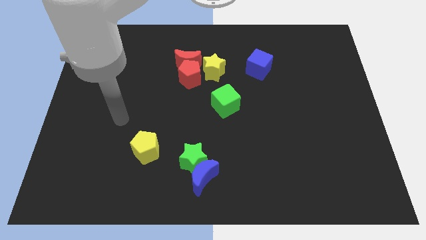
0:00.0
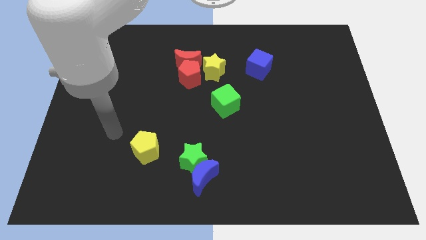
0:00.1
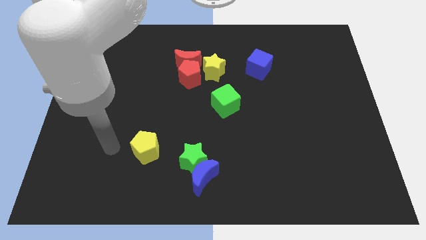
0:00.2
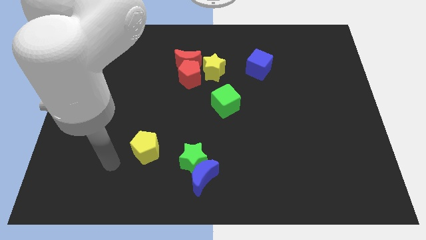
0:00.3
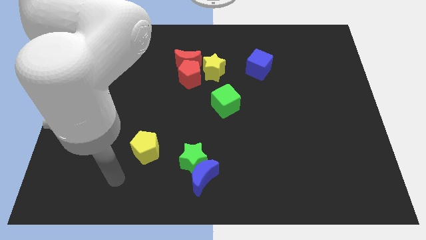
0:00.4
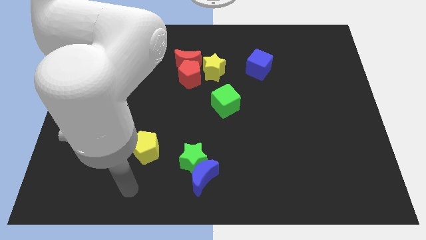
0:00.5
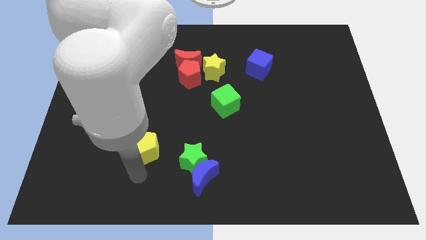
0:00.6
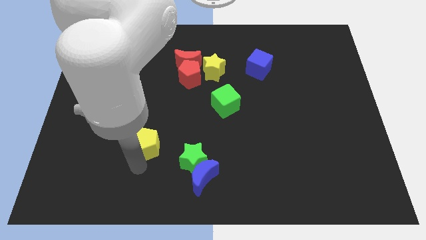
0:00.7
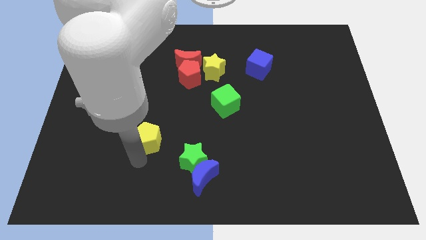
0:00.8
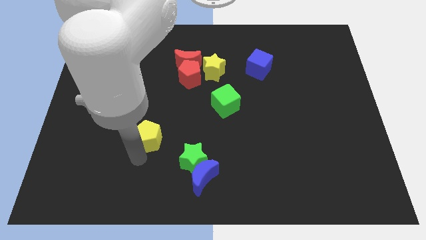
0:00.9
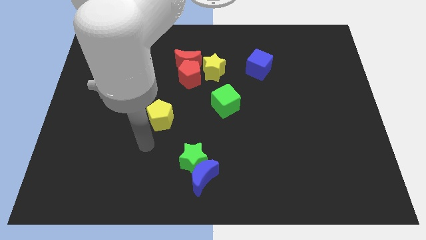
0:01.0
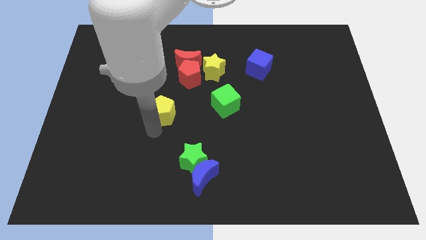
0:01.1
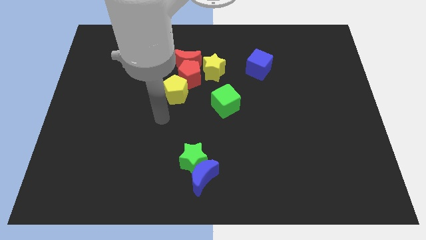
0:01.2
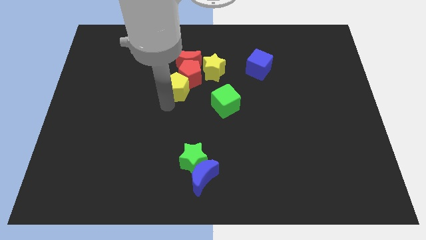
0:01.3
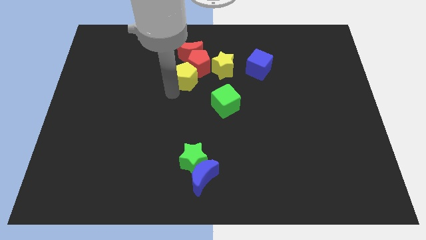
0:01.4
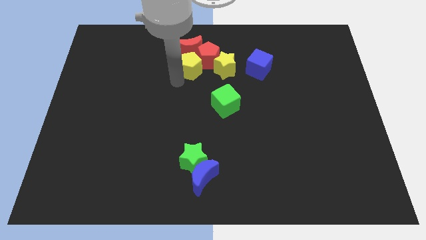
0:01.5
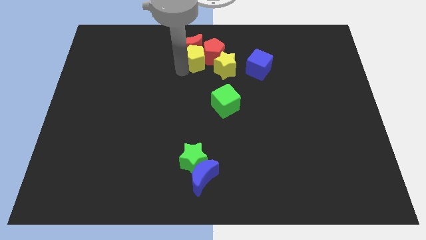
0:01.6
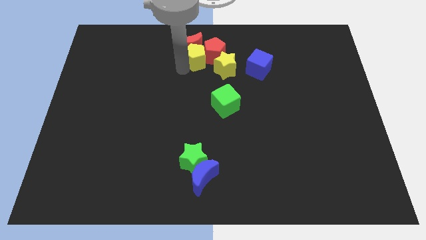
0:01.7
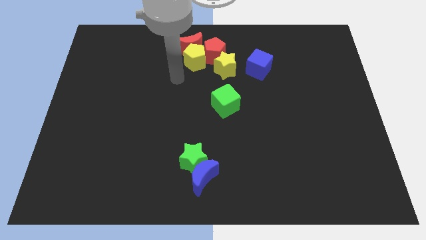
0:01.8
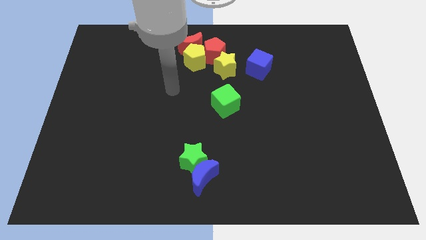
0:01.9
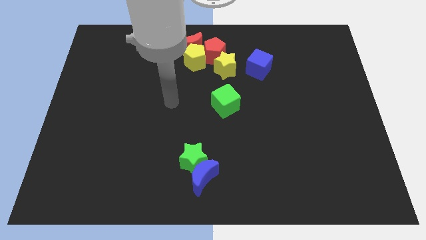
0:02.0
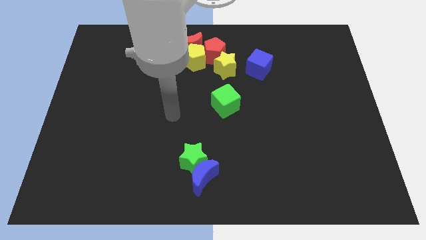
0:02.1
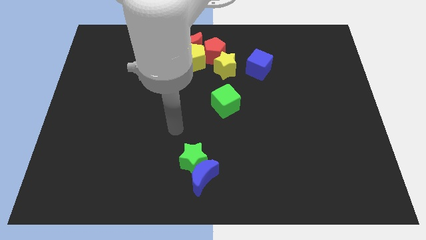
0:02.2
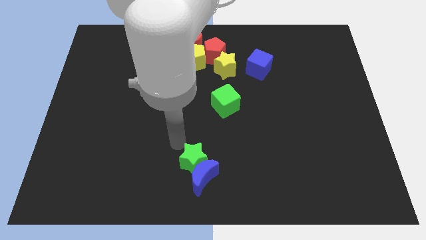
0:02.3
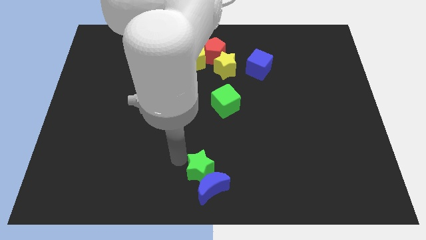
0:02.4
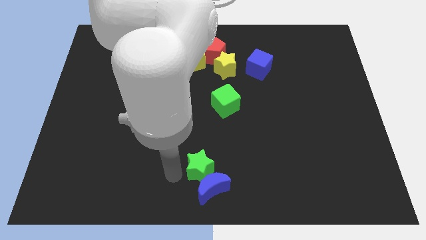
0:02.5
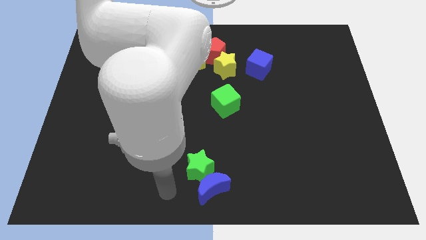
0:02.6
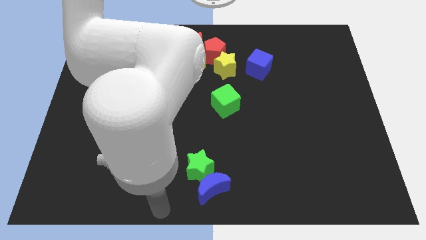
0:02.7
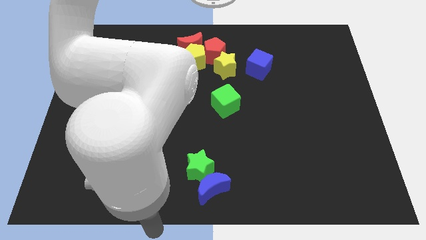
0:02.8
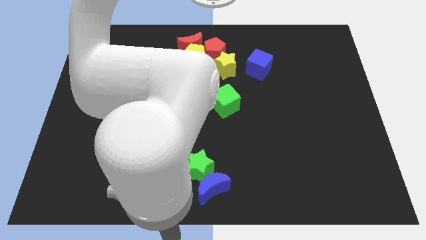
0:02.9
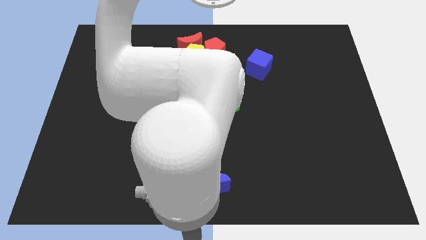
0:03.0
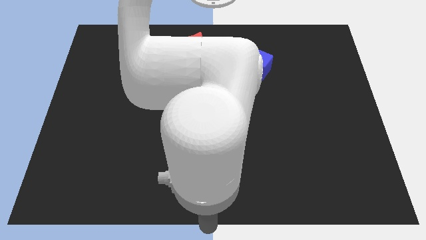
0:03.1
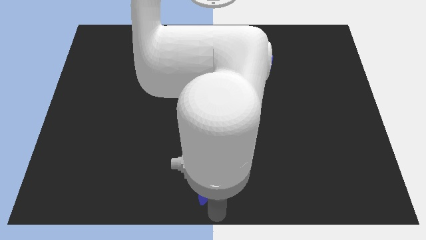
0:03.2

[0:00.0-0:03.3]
move the yellow pentagon into the group of red blocks and go away

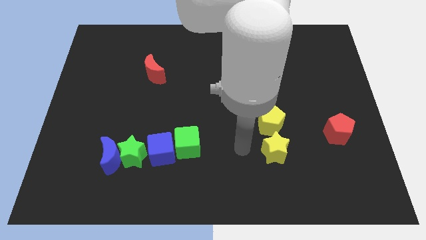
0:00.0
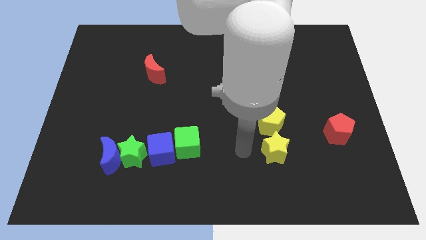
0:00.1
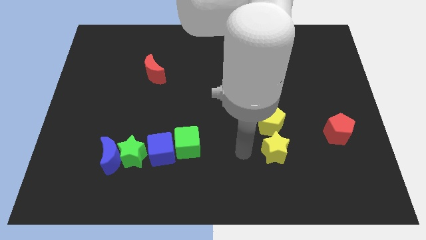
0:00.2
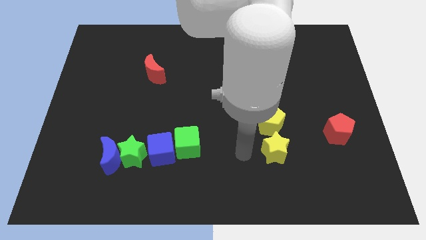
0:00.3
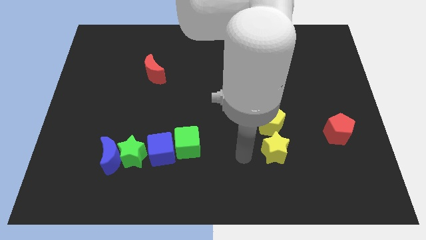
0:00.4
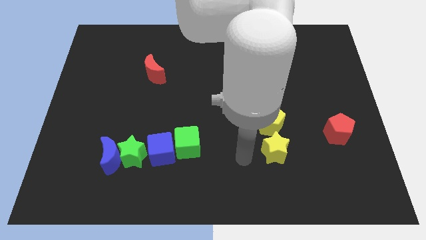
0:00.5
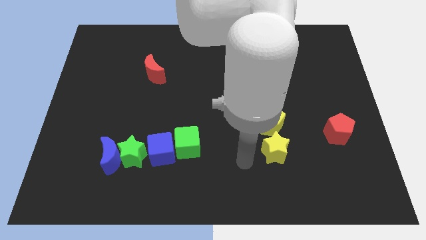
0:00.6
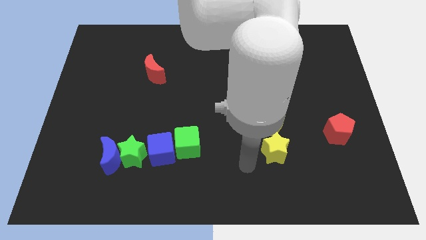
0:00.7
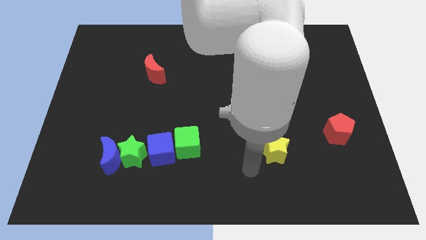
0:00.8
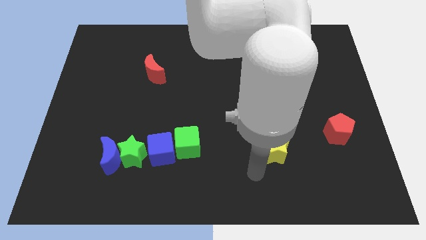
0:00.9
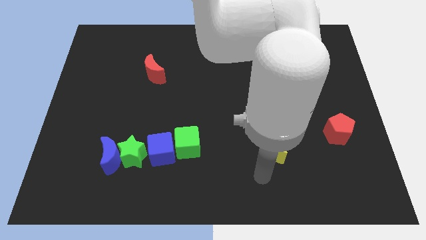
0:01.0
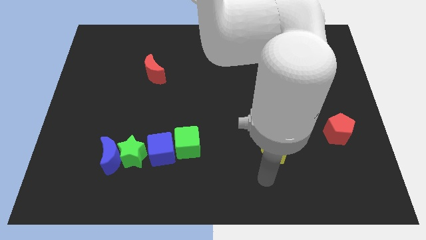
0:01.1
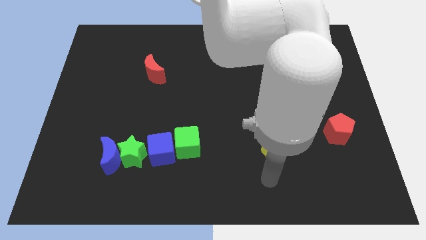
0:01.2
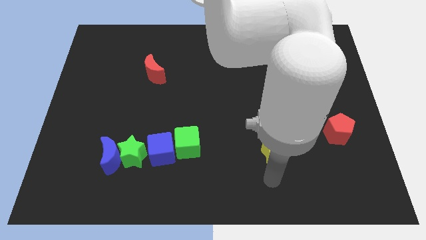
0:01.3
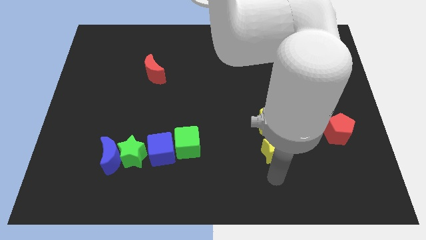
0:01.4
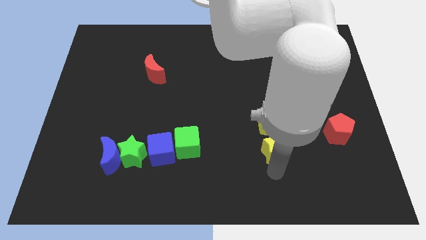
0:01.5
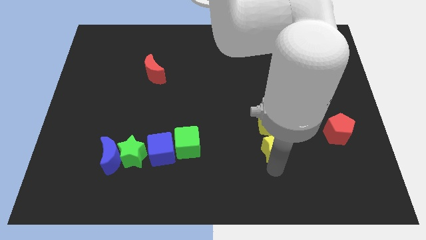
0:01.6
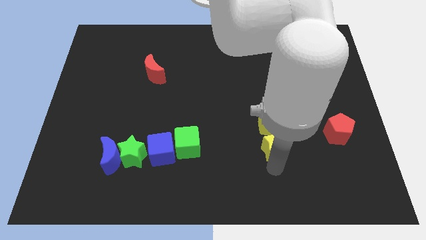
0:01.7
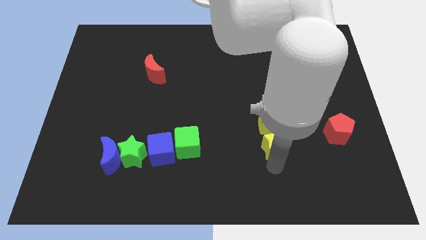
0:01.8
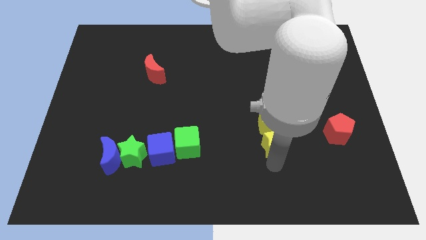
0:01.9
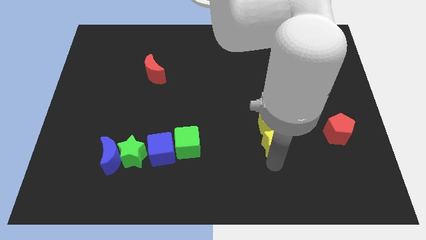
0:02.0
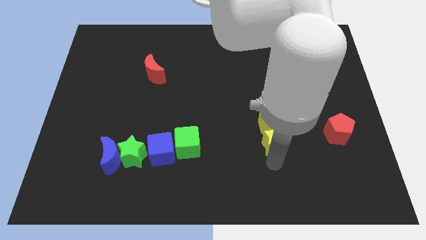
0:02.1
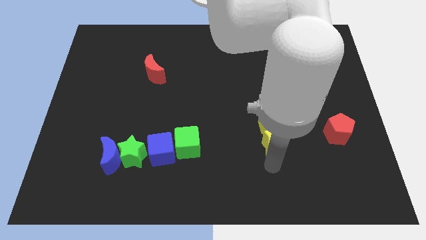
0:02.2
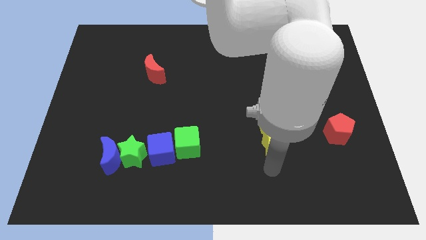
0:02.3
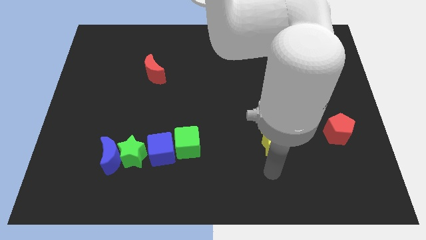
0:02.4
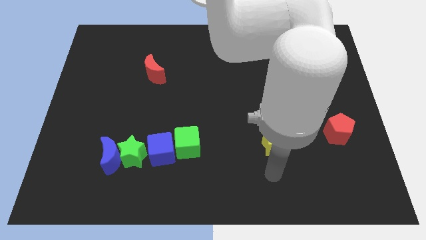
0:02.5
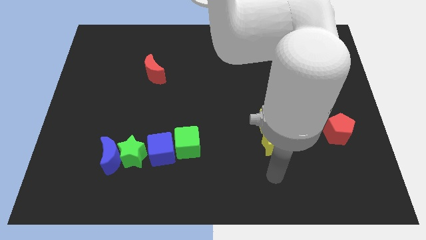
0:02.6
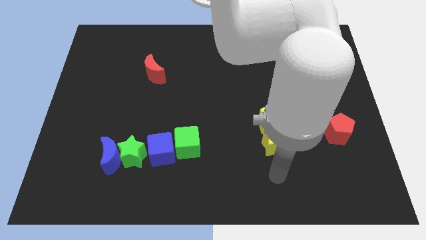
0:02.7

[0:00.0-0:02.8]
move the yellow star into the yellow pentagon

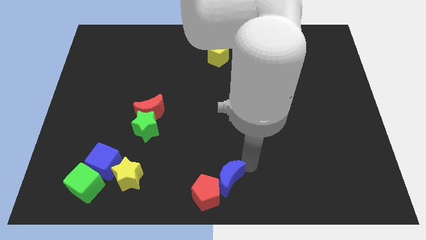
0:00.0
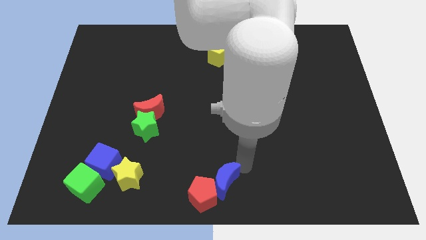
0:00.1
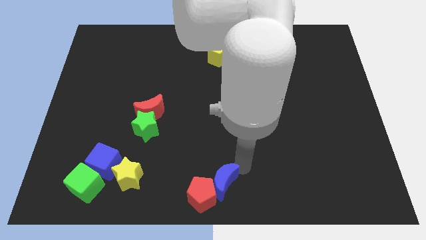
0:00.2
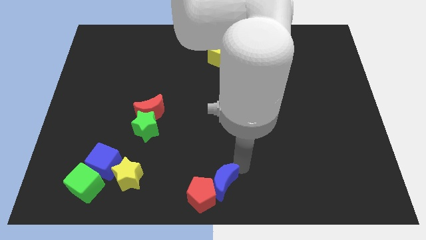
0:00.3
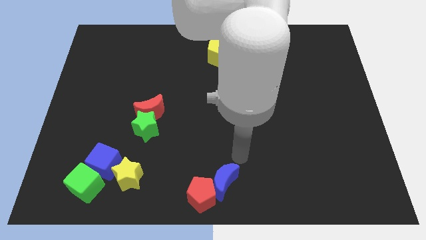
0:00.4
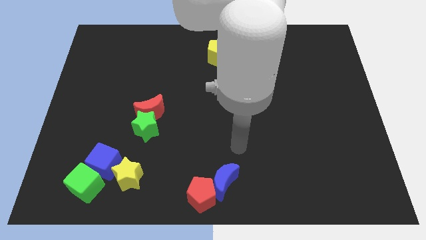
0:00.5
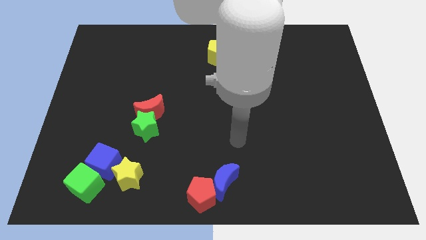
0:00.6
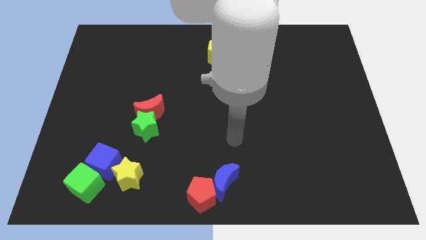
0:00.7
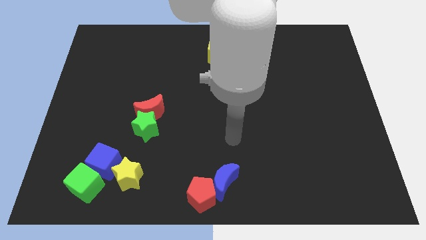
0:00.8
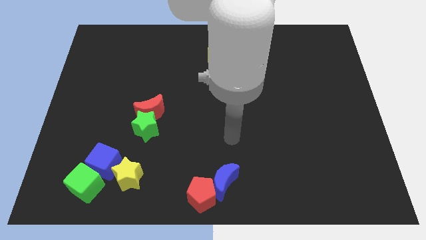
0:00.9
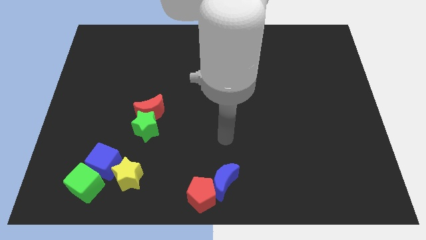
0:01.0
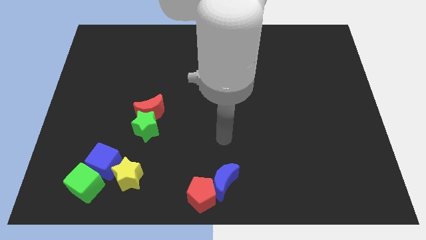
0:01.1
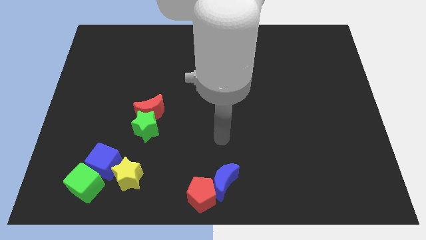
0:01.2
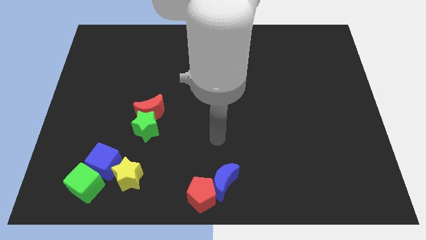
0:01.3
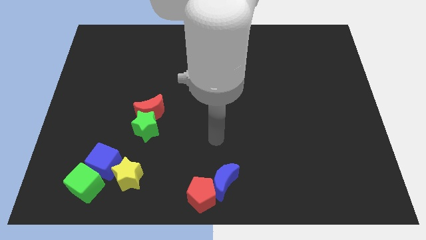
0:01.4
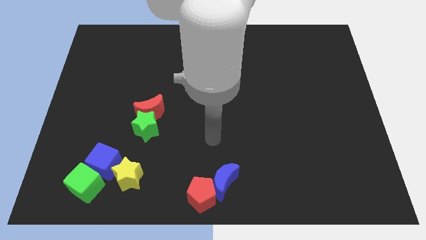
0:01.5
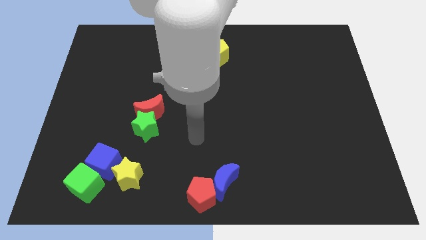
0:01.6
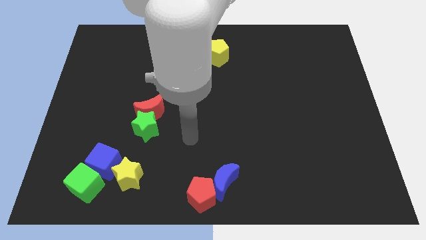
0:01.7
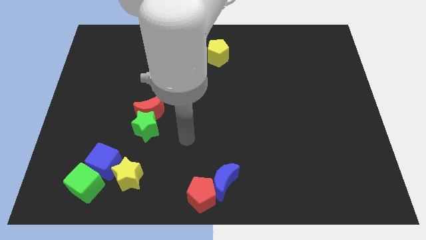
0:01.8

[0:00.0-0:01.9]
move the blue moon into the red pentagon

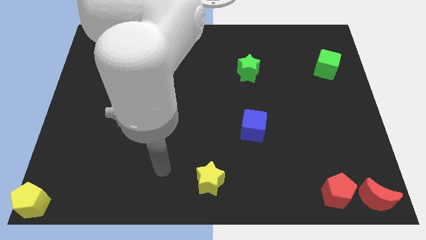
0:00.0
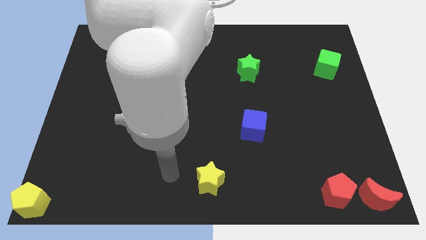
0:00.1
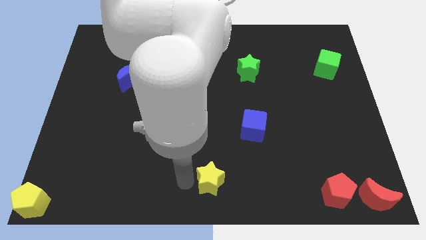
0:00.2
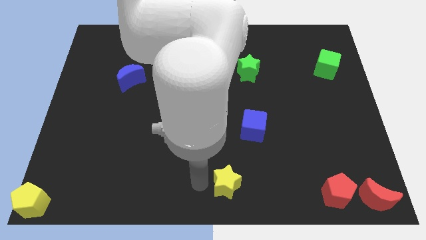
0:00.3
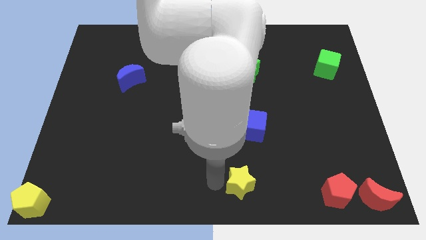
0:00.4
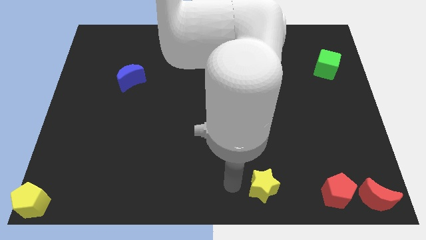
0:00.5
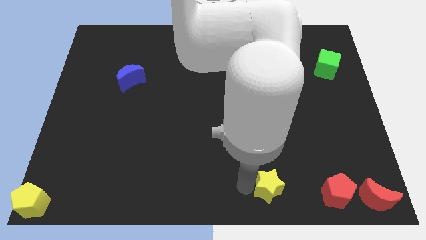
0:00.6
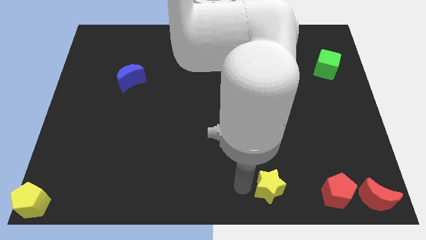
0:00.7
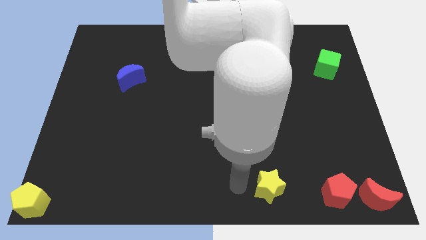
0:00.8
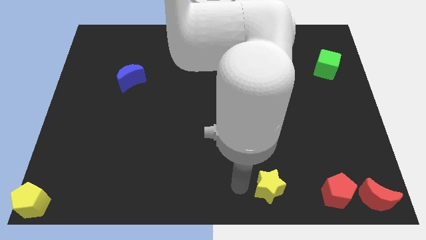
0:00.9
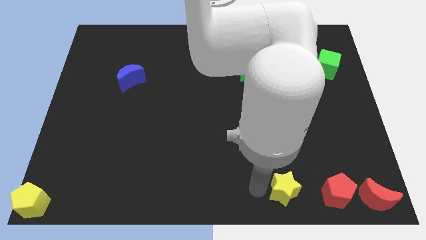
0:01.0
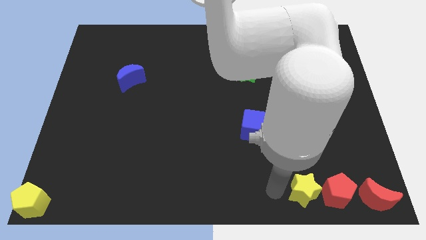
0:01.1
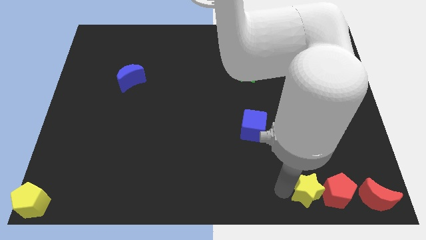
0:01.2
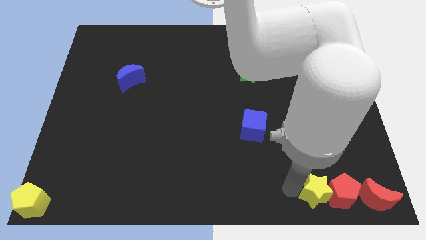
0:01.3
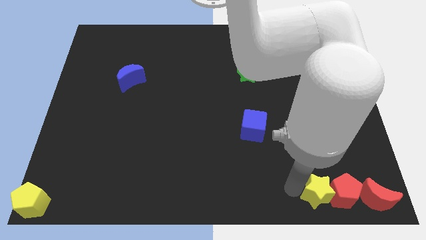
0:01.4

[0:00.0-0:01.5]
push the yellow star towards red pentagon
